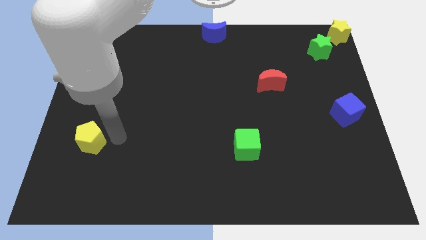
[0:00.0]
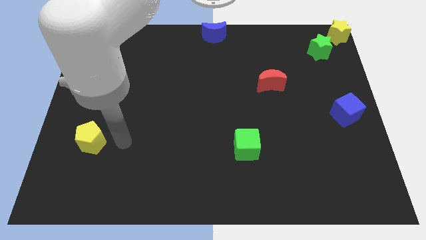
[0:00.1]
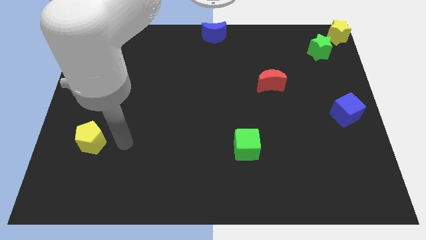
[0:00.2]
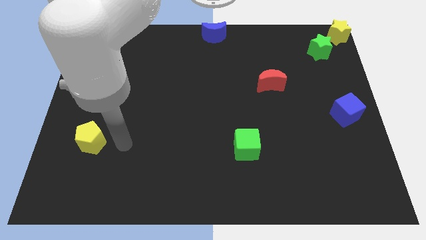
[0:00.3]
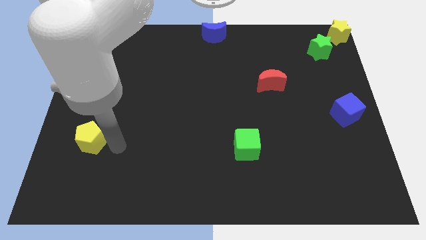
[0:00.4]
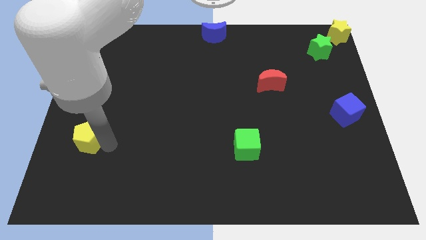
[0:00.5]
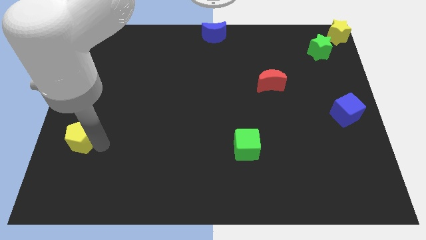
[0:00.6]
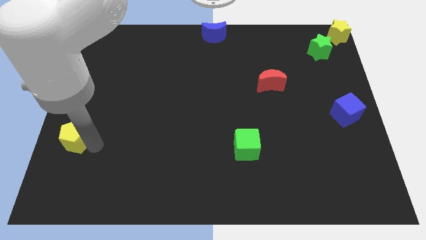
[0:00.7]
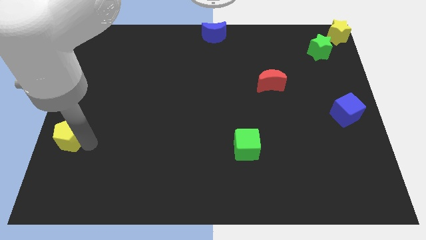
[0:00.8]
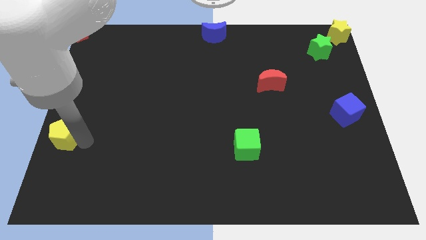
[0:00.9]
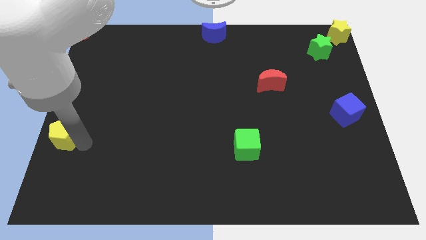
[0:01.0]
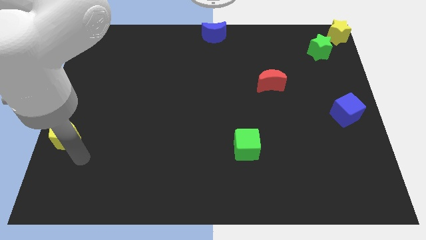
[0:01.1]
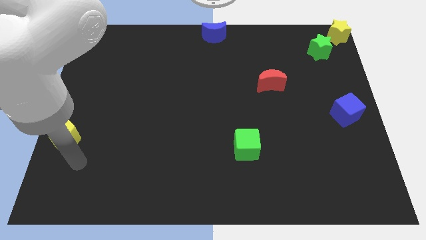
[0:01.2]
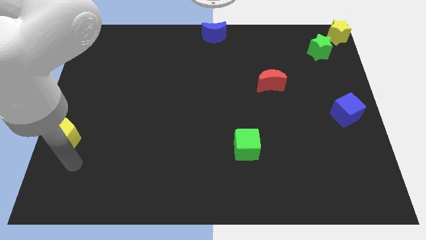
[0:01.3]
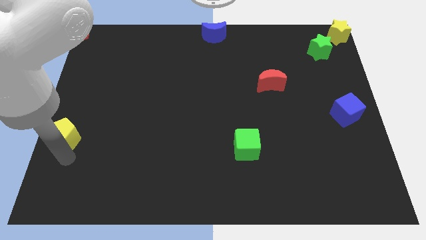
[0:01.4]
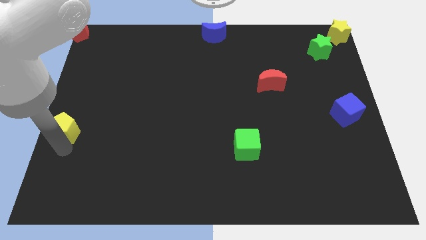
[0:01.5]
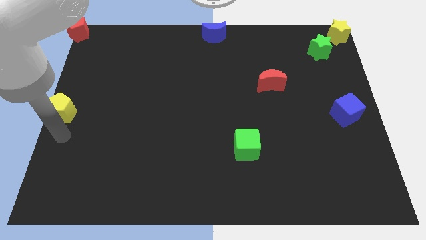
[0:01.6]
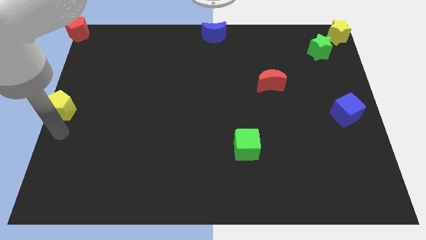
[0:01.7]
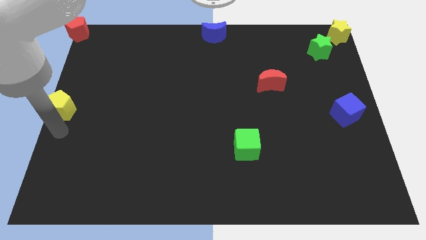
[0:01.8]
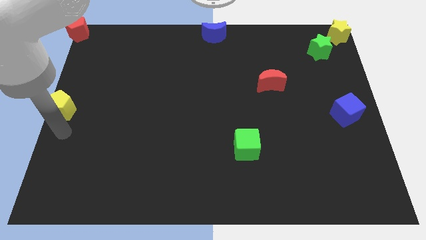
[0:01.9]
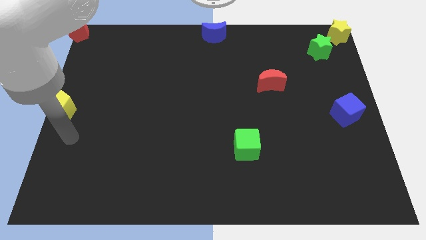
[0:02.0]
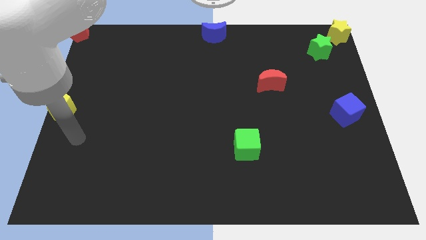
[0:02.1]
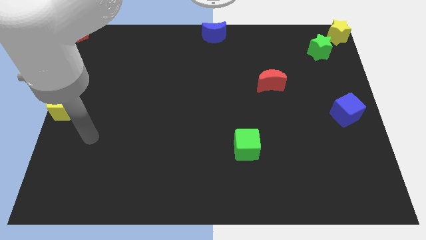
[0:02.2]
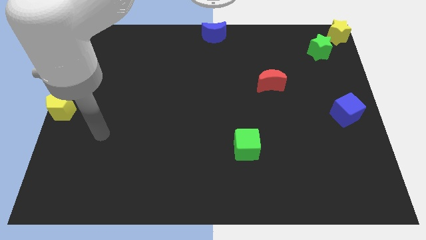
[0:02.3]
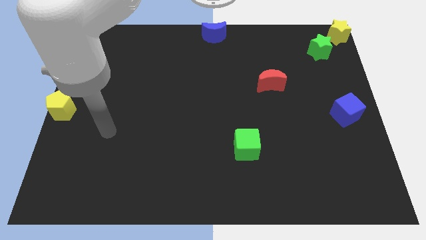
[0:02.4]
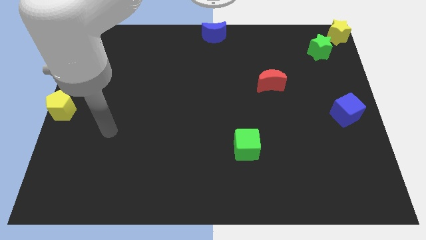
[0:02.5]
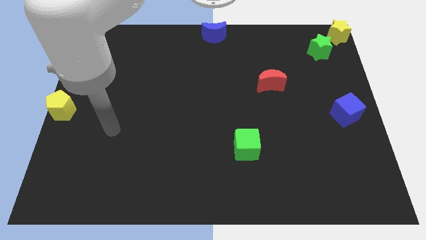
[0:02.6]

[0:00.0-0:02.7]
place yellow pentagon at the left center of the board

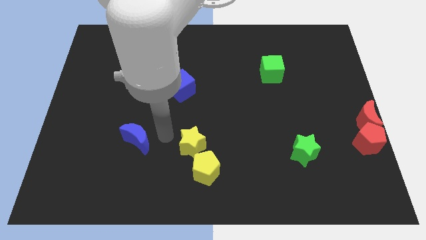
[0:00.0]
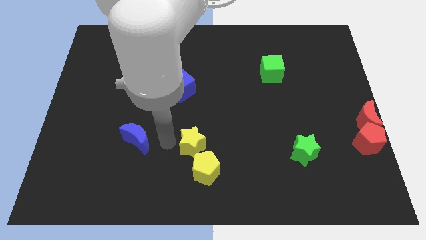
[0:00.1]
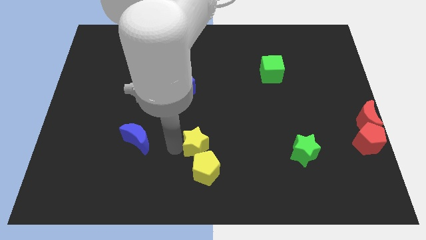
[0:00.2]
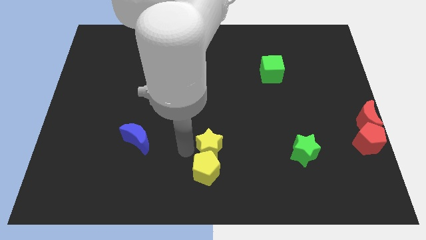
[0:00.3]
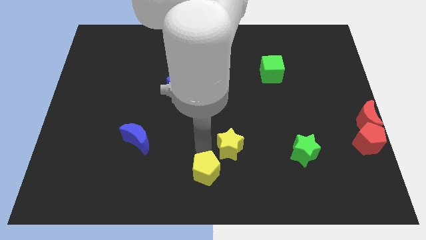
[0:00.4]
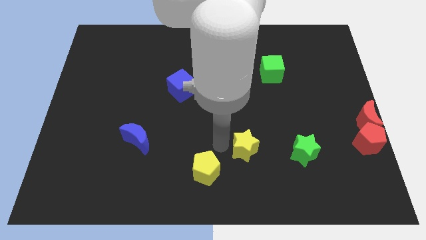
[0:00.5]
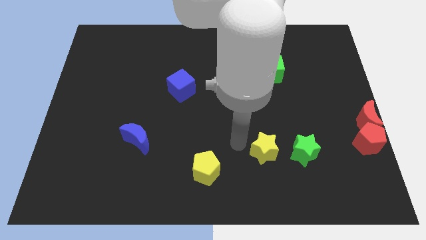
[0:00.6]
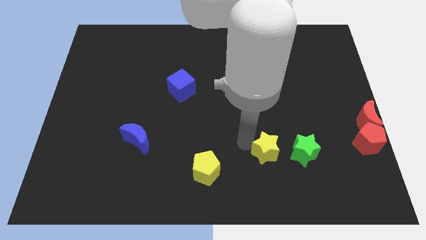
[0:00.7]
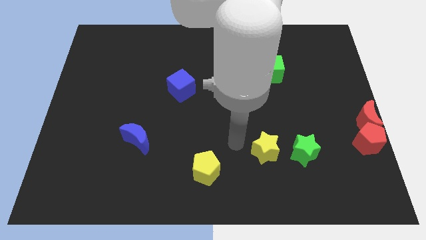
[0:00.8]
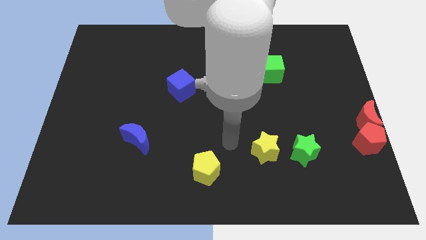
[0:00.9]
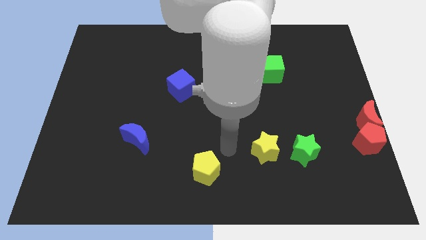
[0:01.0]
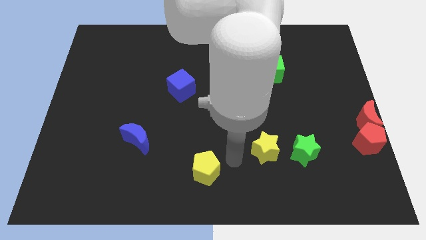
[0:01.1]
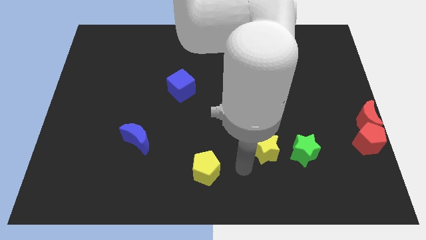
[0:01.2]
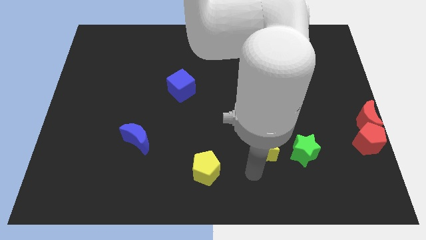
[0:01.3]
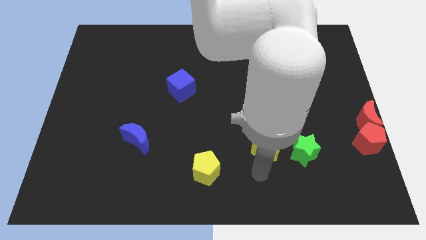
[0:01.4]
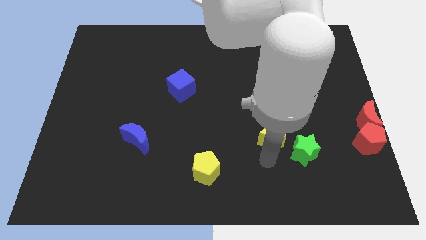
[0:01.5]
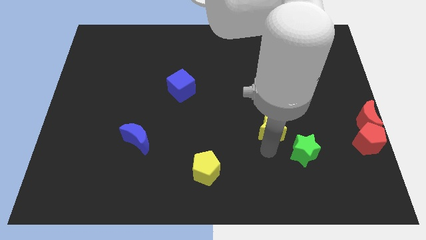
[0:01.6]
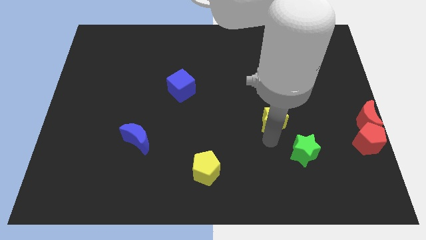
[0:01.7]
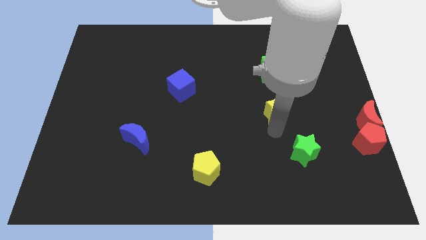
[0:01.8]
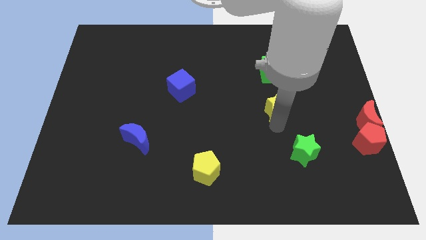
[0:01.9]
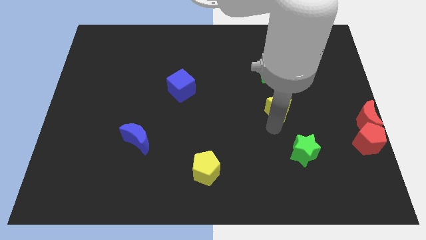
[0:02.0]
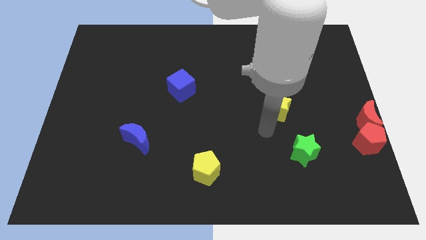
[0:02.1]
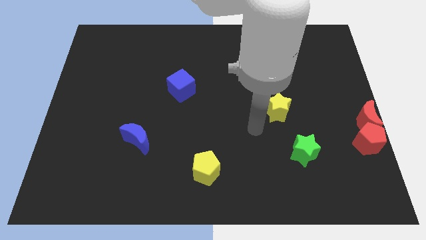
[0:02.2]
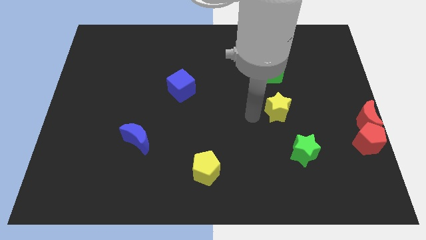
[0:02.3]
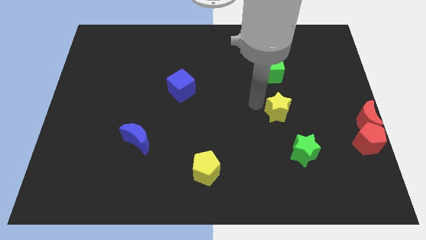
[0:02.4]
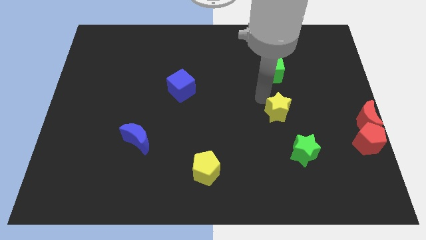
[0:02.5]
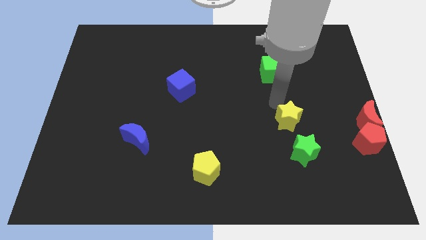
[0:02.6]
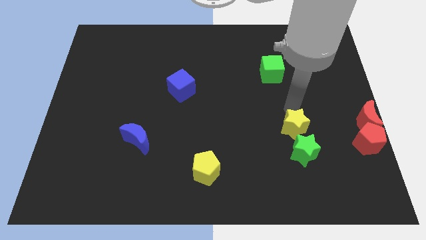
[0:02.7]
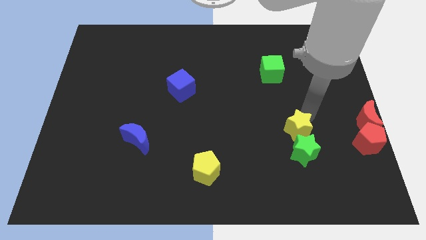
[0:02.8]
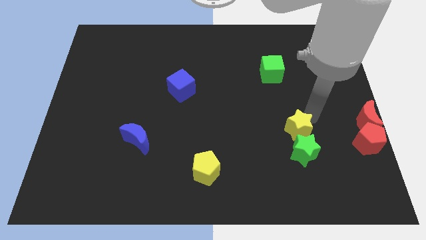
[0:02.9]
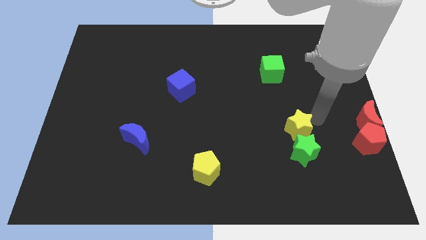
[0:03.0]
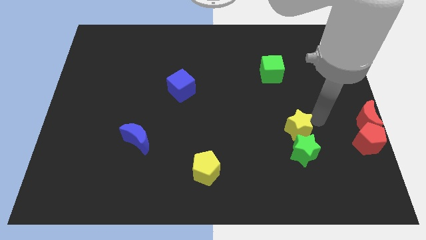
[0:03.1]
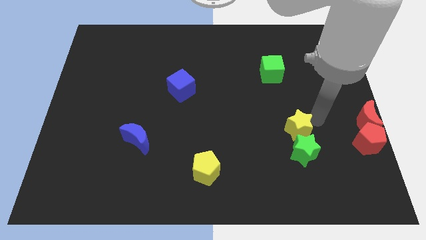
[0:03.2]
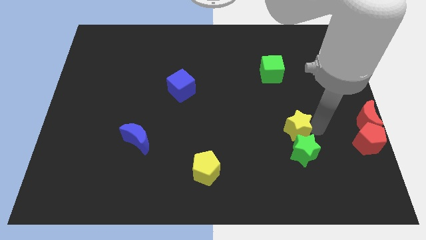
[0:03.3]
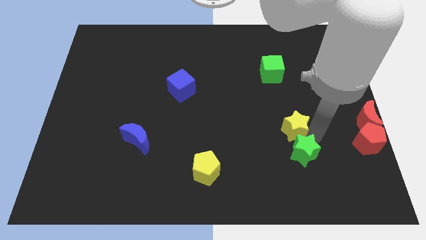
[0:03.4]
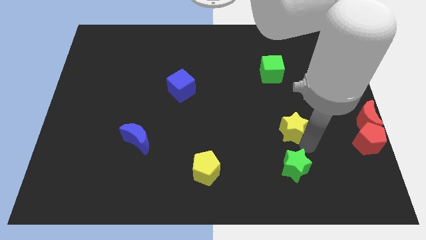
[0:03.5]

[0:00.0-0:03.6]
place the yellow star above the green star

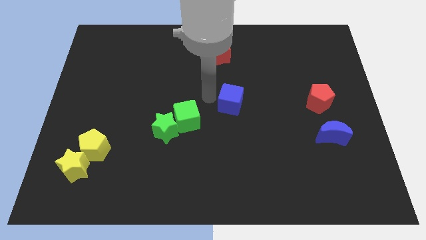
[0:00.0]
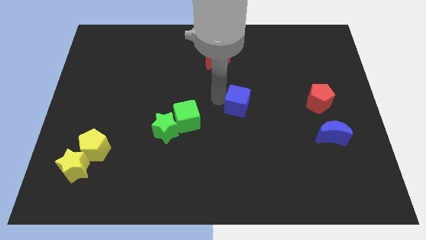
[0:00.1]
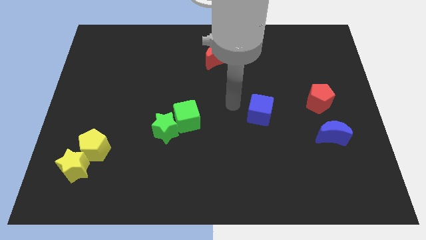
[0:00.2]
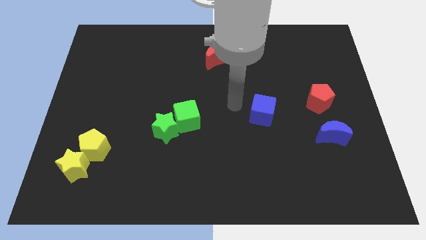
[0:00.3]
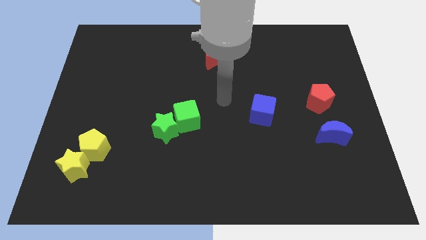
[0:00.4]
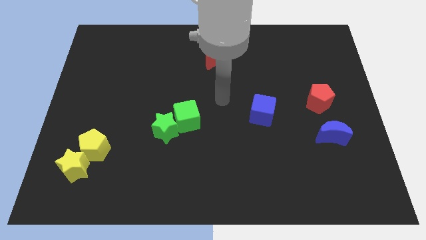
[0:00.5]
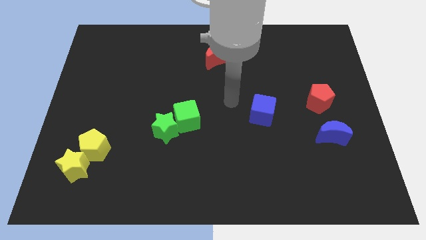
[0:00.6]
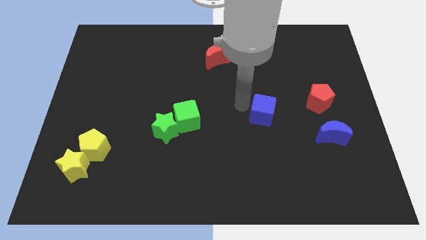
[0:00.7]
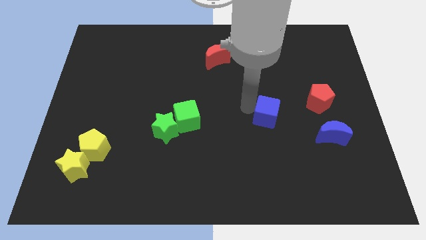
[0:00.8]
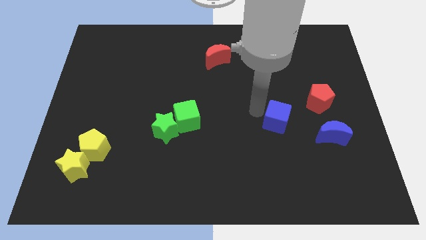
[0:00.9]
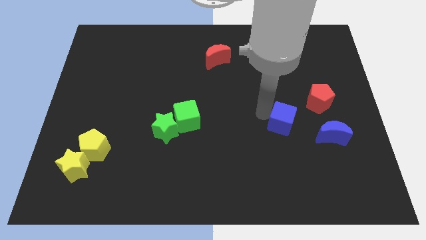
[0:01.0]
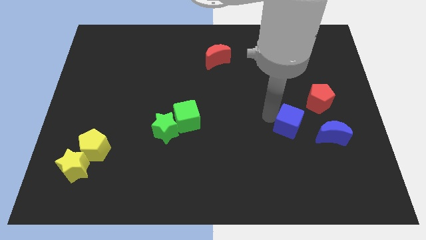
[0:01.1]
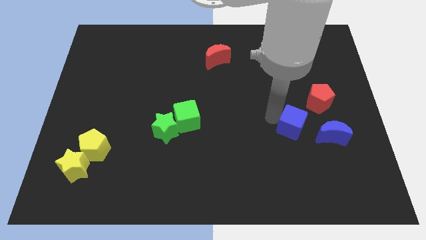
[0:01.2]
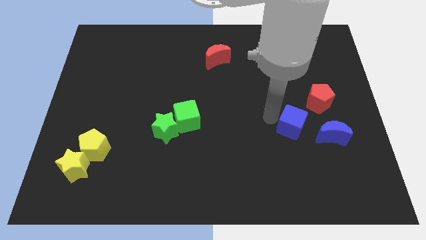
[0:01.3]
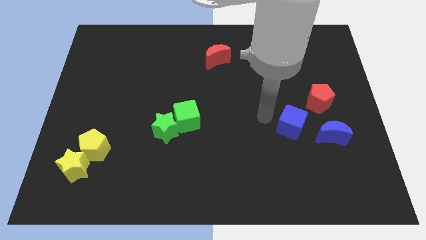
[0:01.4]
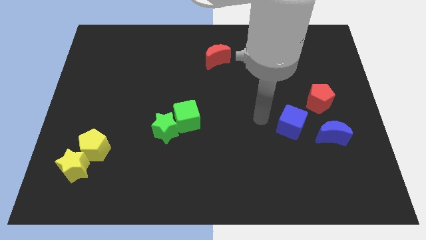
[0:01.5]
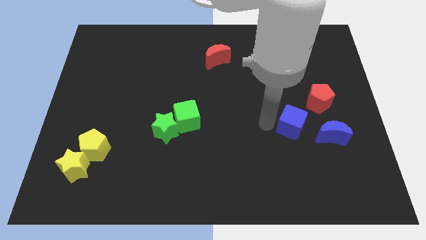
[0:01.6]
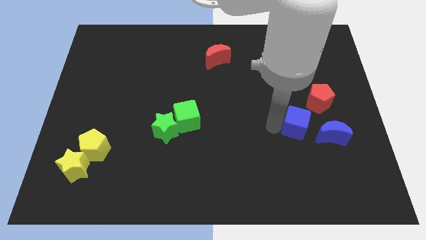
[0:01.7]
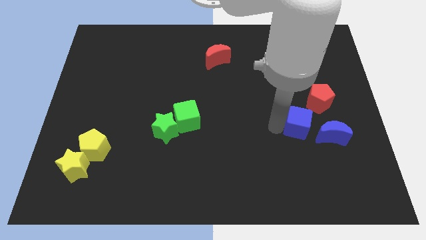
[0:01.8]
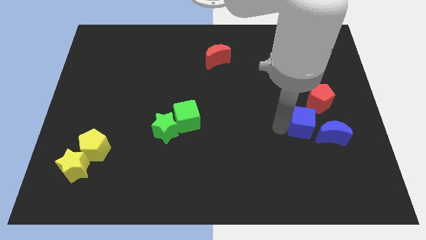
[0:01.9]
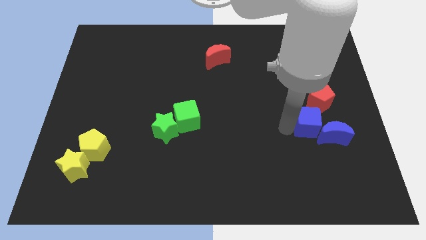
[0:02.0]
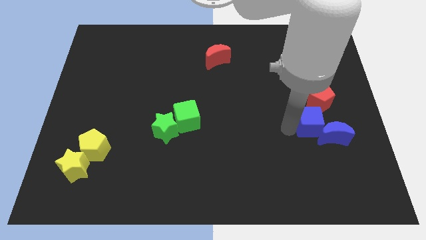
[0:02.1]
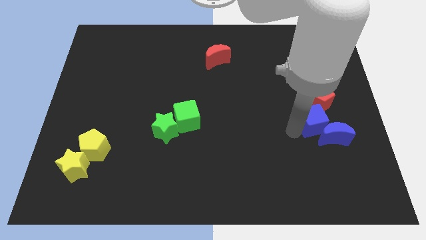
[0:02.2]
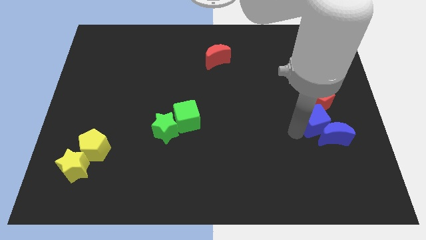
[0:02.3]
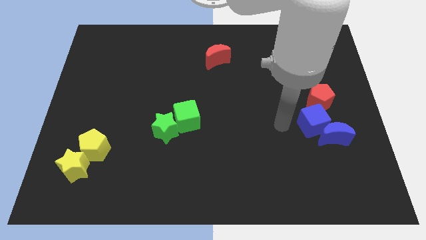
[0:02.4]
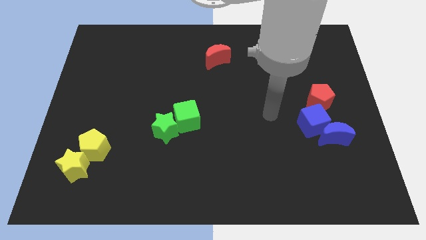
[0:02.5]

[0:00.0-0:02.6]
push the blue cube in between the red pentagon and the blue moon

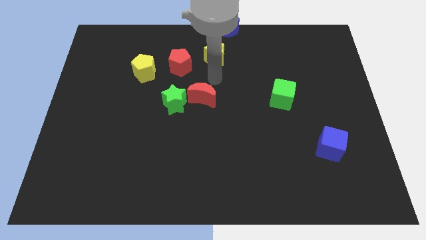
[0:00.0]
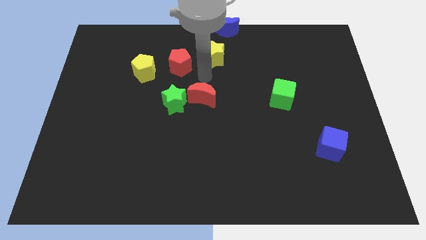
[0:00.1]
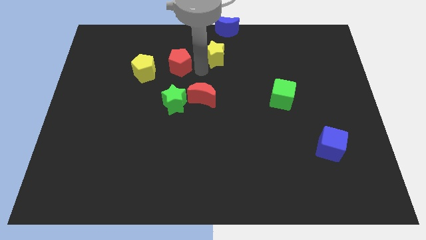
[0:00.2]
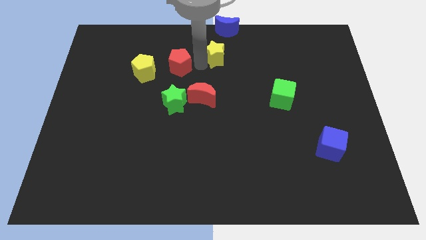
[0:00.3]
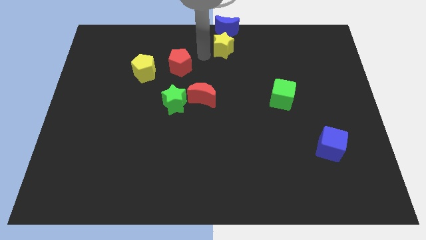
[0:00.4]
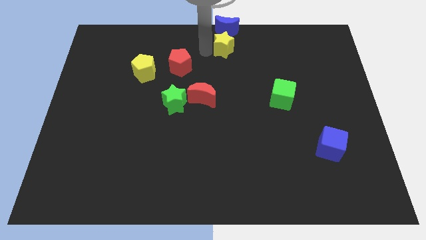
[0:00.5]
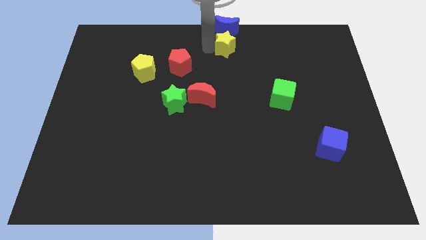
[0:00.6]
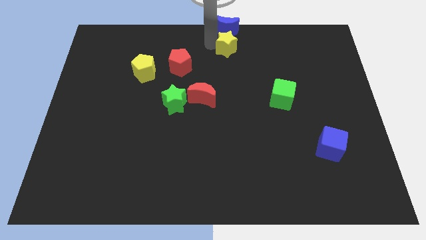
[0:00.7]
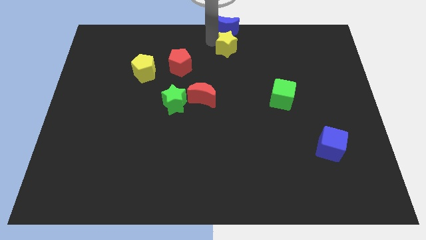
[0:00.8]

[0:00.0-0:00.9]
push the yellow star below the blue moon
